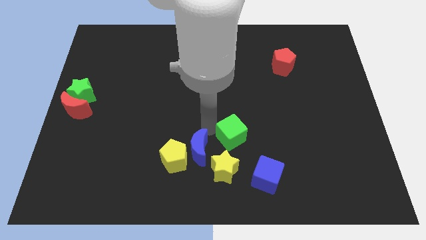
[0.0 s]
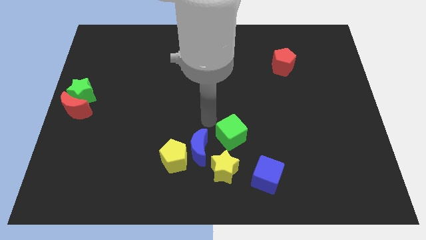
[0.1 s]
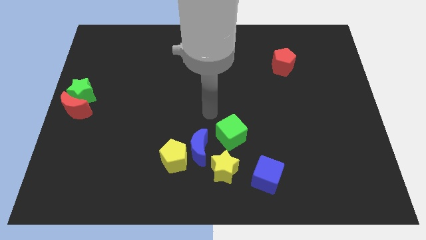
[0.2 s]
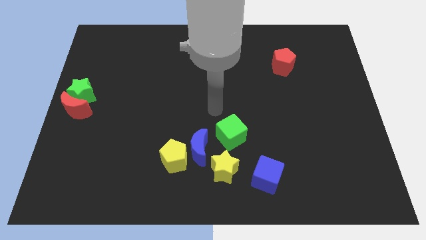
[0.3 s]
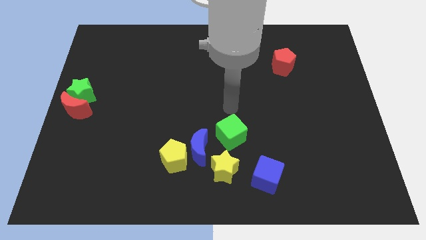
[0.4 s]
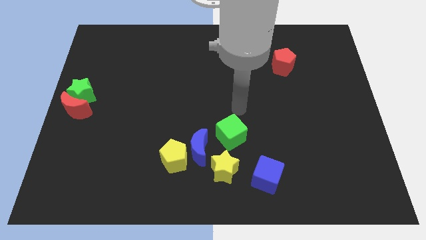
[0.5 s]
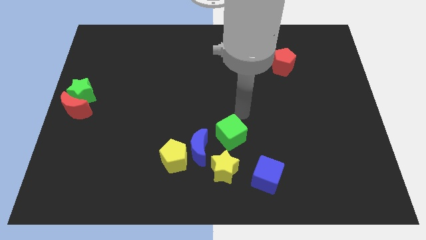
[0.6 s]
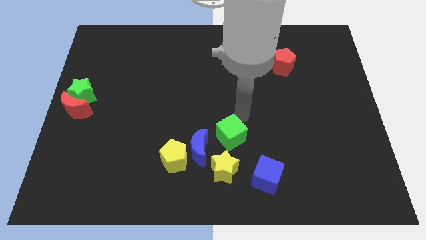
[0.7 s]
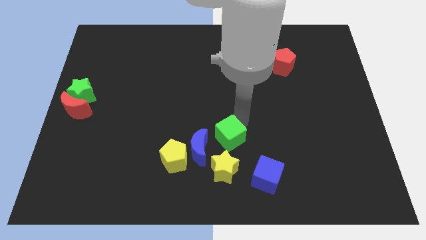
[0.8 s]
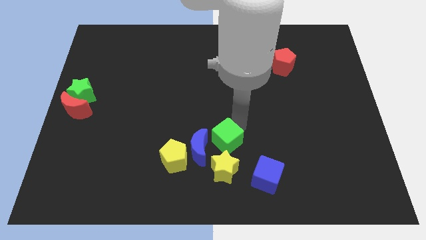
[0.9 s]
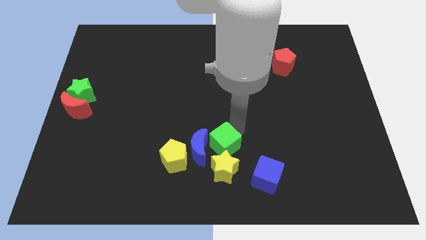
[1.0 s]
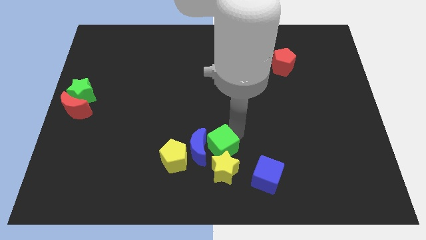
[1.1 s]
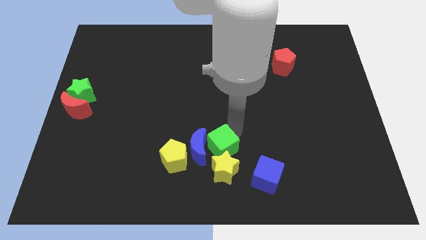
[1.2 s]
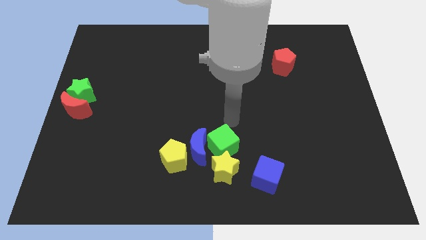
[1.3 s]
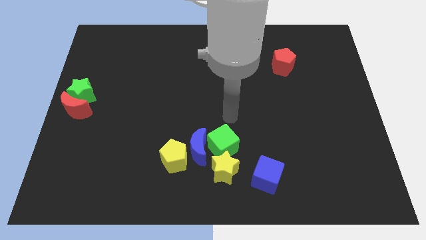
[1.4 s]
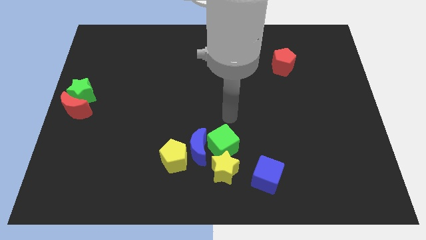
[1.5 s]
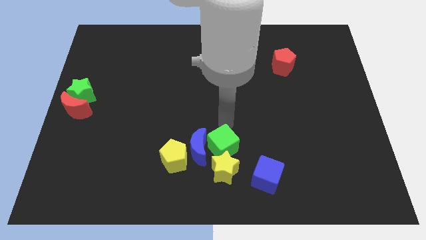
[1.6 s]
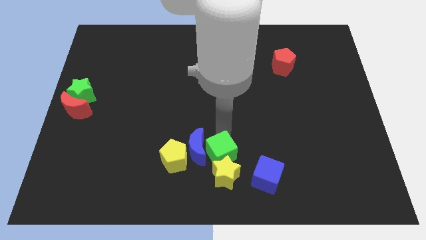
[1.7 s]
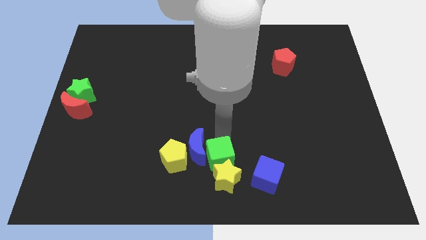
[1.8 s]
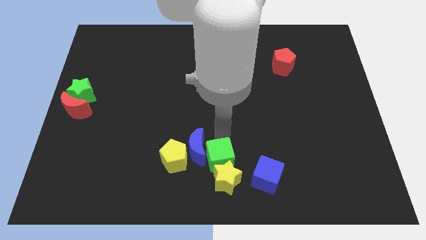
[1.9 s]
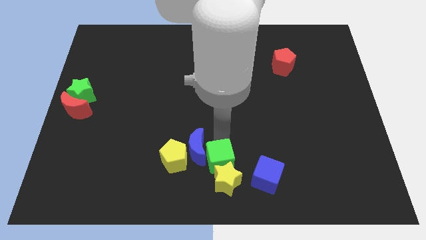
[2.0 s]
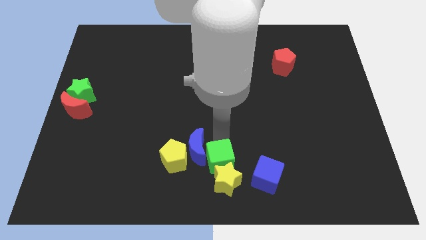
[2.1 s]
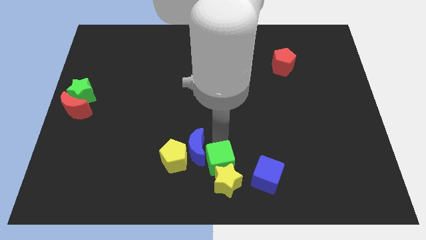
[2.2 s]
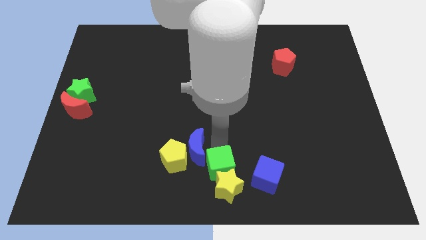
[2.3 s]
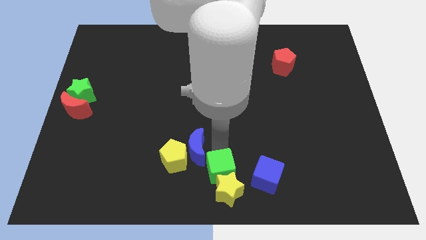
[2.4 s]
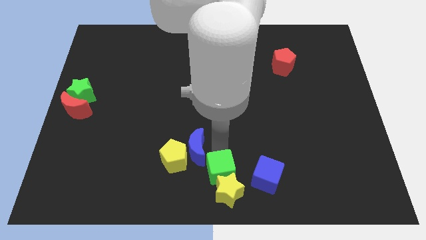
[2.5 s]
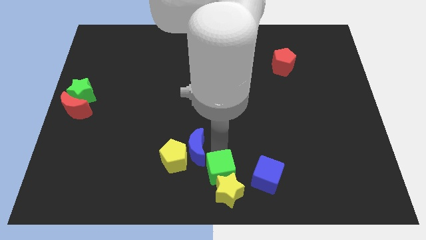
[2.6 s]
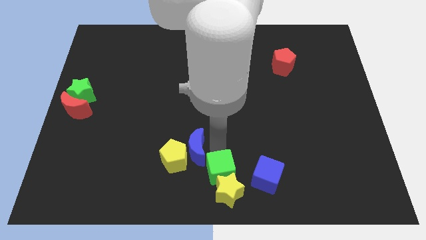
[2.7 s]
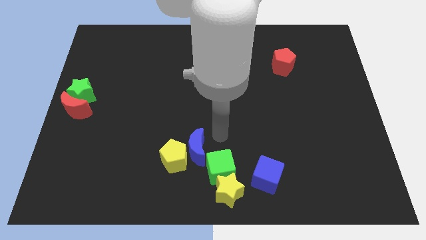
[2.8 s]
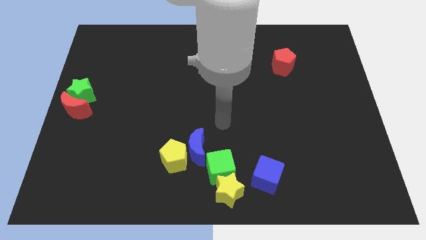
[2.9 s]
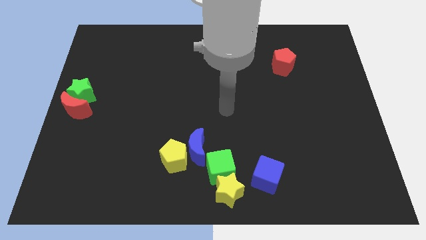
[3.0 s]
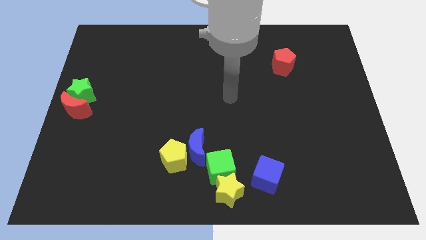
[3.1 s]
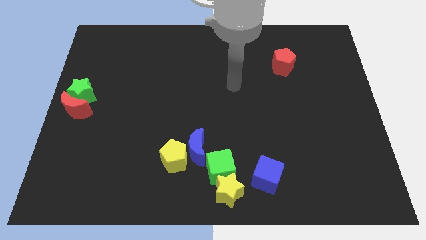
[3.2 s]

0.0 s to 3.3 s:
move the green cube into the yellow star towards the bottom center of the board

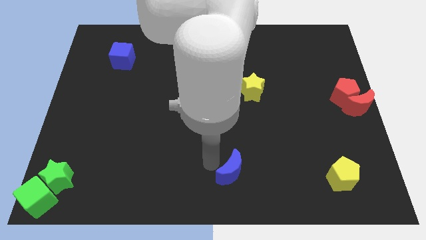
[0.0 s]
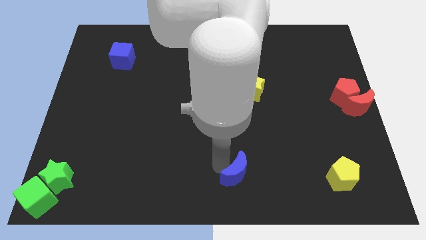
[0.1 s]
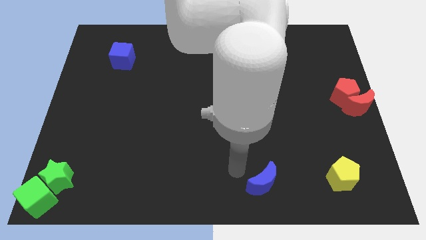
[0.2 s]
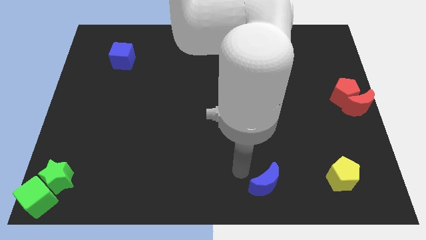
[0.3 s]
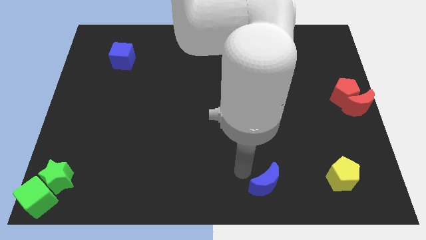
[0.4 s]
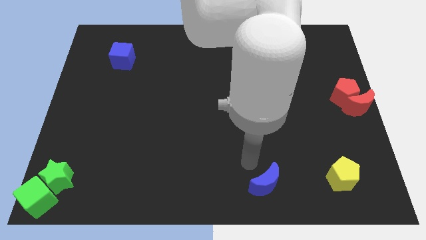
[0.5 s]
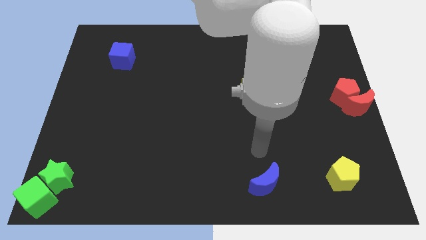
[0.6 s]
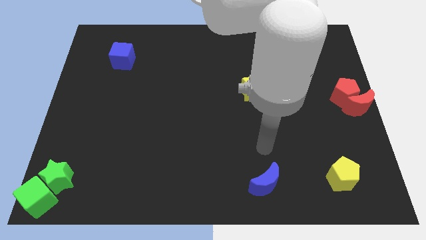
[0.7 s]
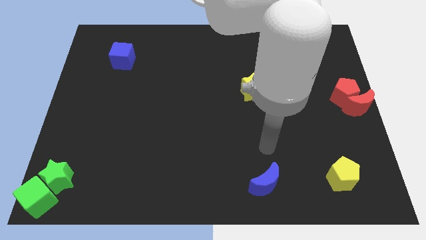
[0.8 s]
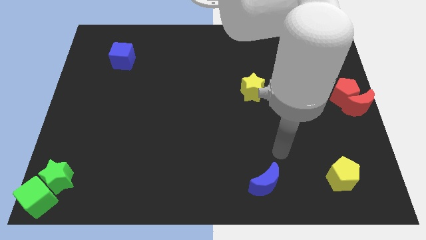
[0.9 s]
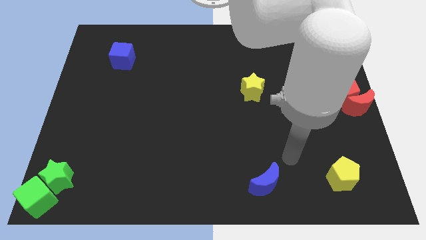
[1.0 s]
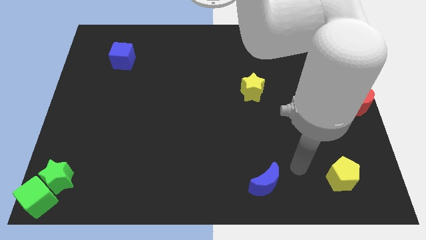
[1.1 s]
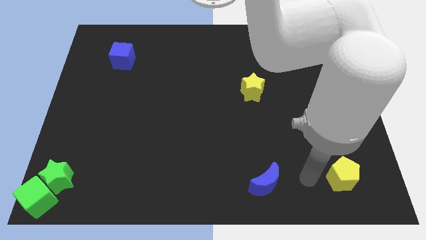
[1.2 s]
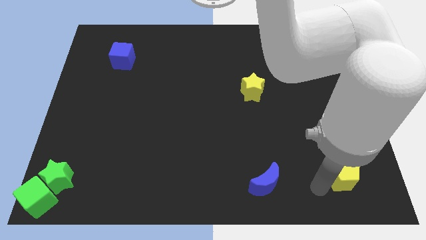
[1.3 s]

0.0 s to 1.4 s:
push the blue moon parallel to yellow pentagon

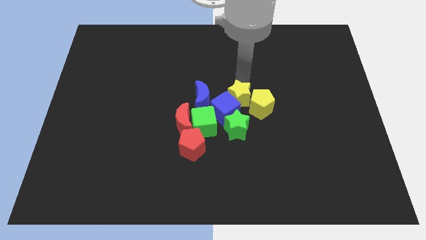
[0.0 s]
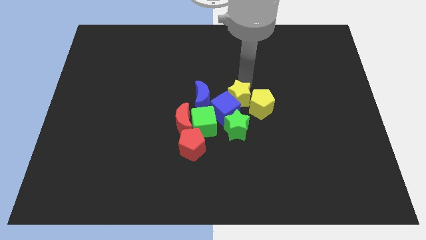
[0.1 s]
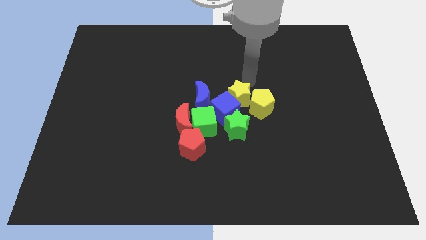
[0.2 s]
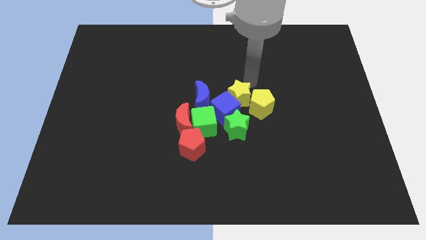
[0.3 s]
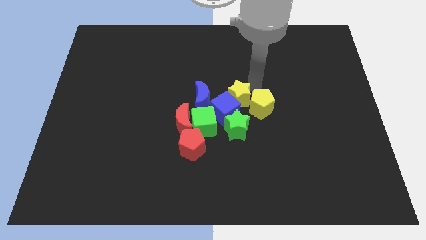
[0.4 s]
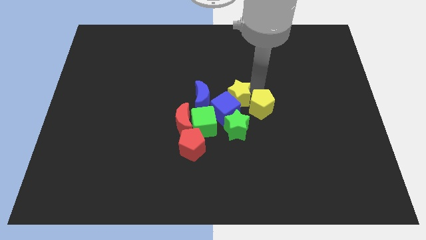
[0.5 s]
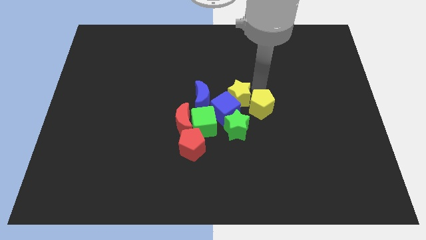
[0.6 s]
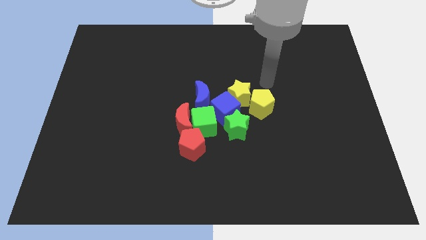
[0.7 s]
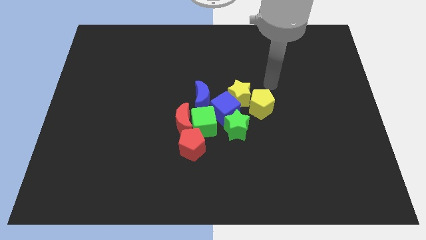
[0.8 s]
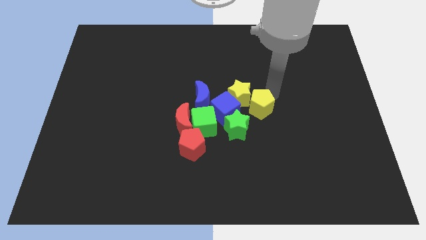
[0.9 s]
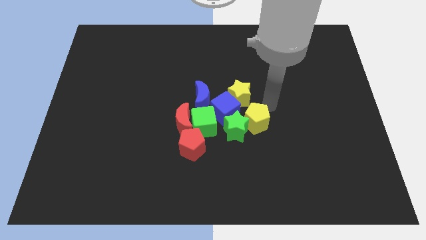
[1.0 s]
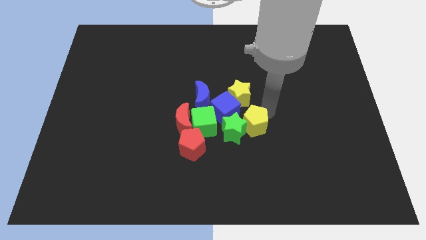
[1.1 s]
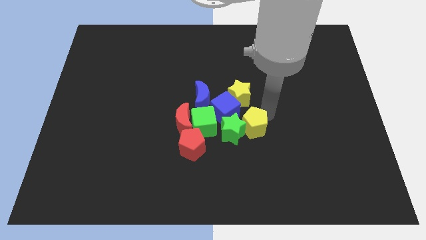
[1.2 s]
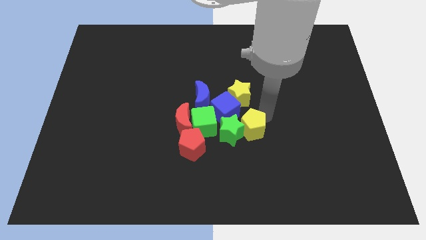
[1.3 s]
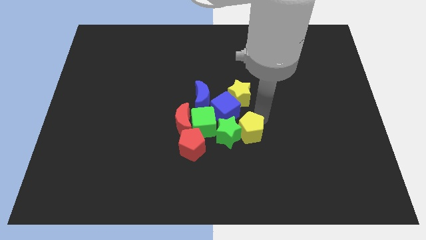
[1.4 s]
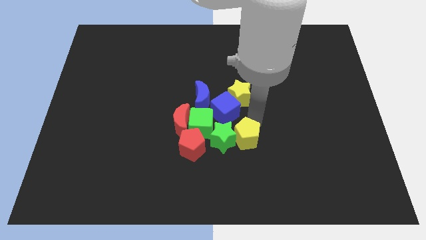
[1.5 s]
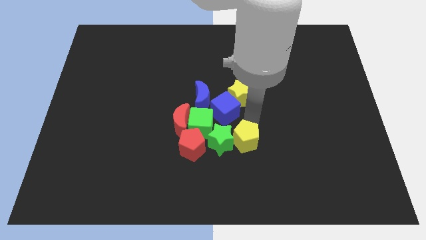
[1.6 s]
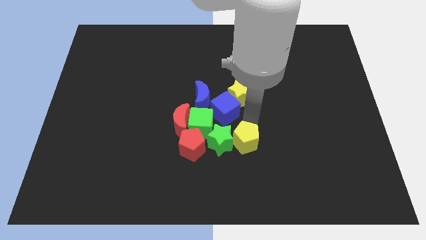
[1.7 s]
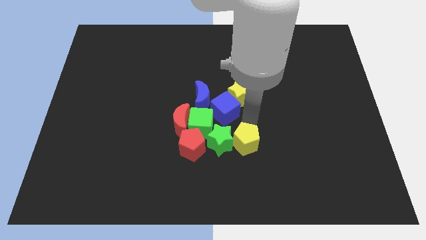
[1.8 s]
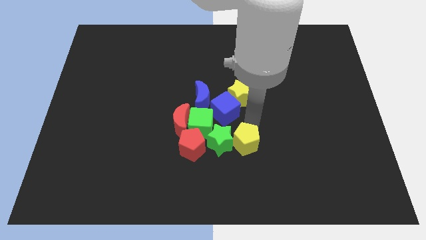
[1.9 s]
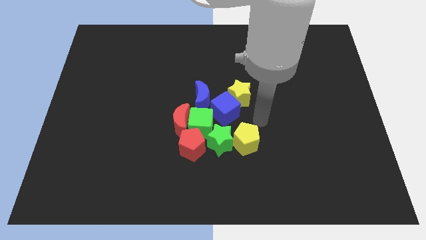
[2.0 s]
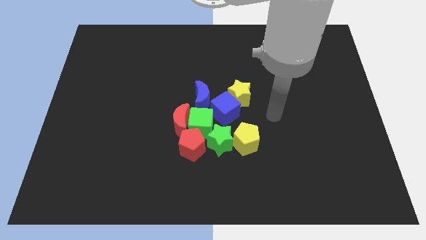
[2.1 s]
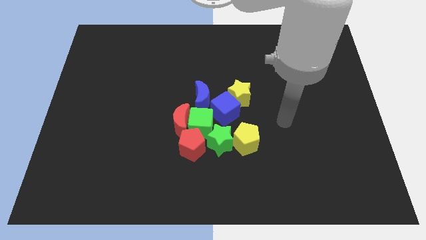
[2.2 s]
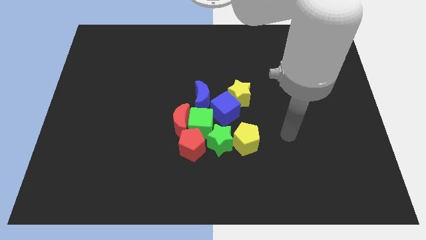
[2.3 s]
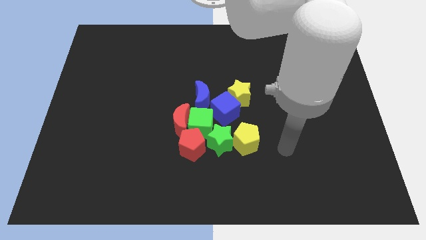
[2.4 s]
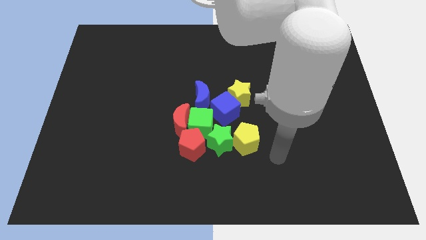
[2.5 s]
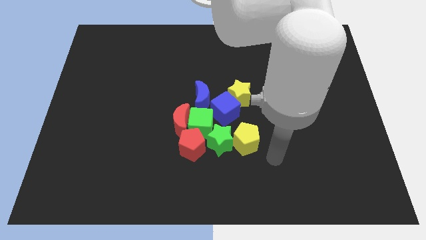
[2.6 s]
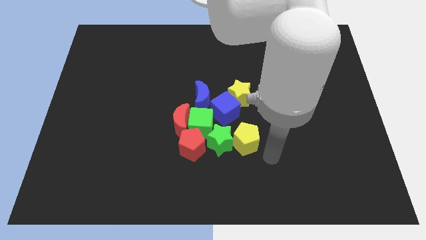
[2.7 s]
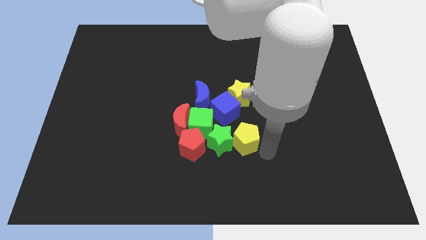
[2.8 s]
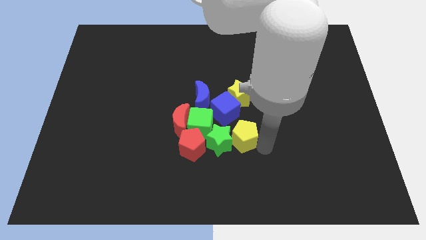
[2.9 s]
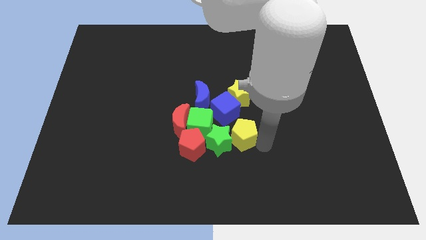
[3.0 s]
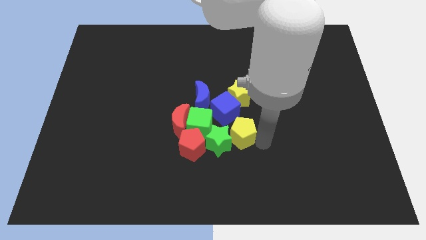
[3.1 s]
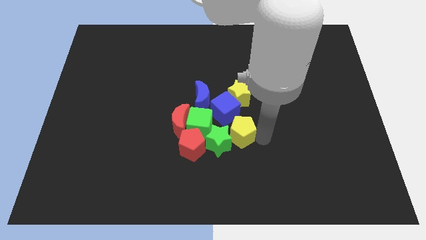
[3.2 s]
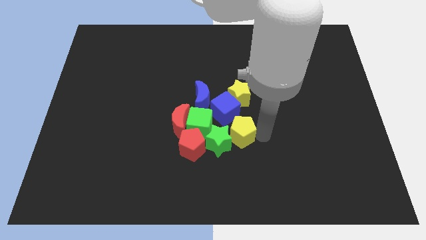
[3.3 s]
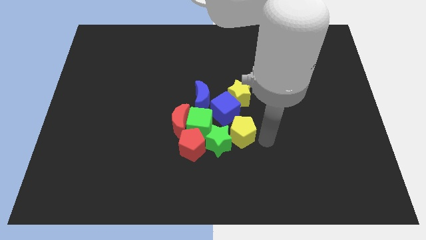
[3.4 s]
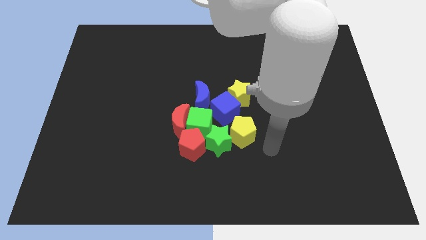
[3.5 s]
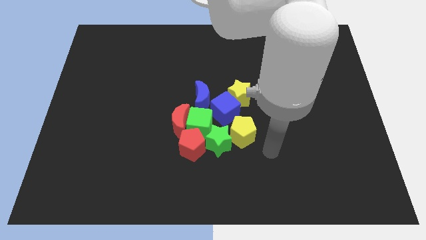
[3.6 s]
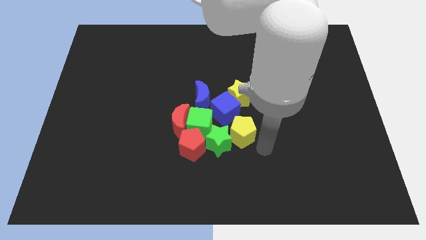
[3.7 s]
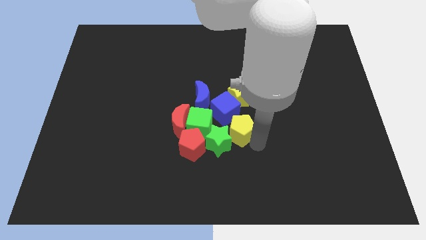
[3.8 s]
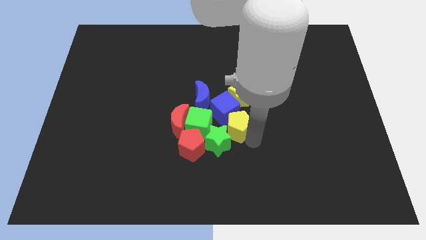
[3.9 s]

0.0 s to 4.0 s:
separate yellow pentagon from yellow star

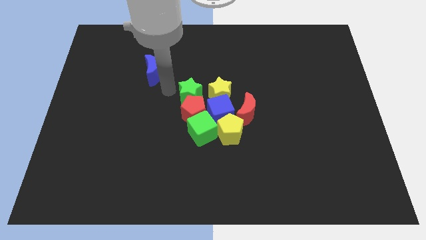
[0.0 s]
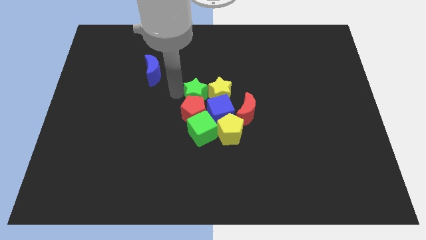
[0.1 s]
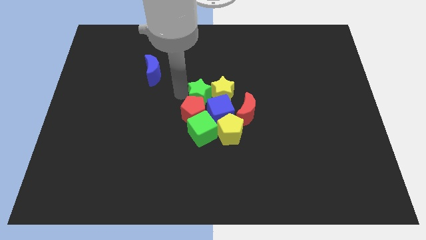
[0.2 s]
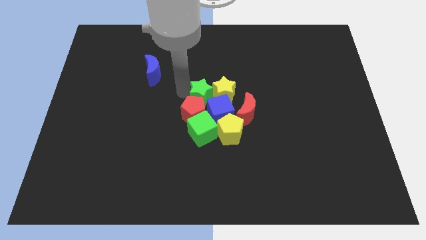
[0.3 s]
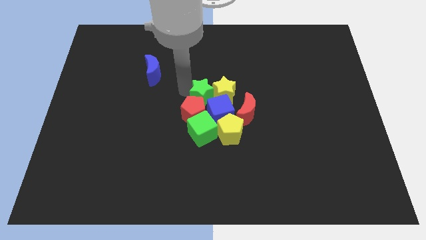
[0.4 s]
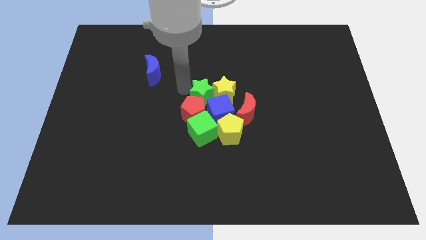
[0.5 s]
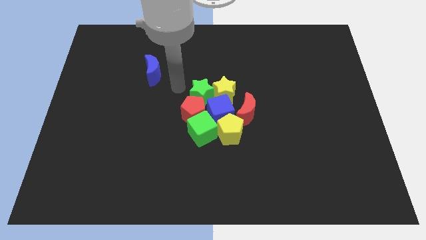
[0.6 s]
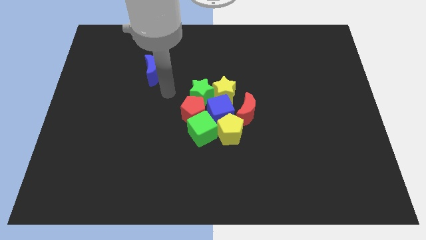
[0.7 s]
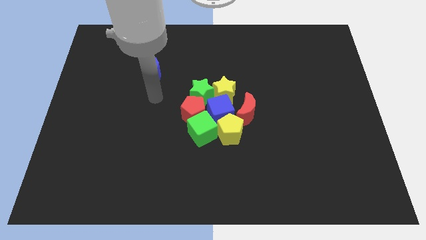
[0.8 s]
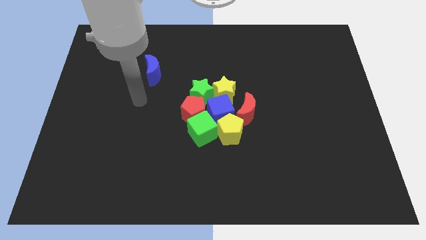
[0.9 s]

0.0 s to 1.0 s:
slightly push the green star into yellow star
